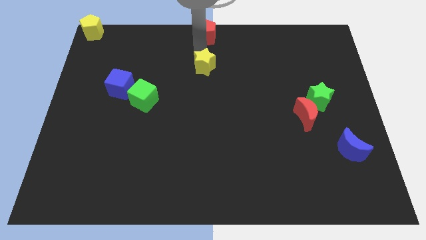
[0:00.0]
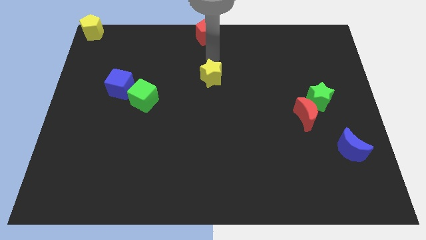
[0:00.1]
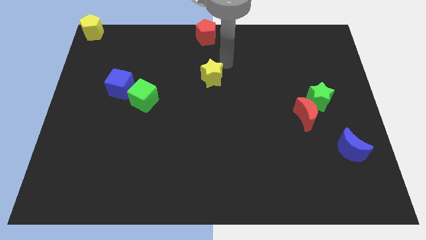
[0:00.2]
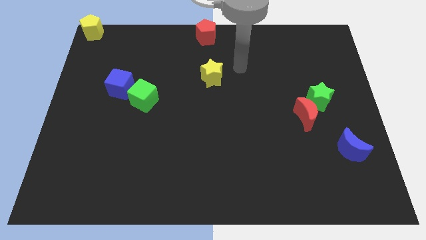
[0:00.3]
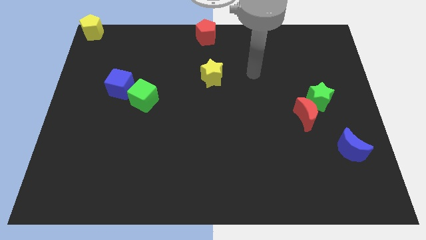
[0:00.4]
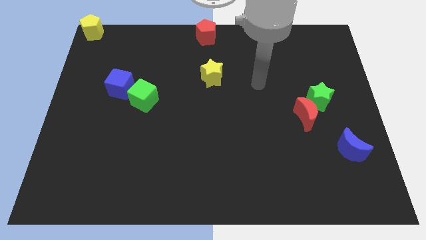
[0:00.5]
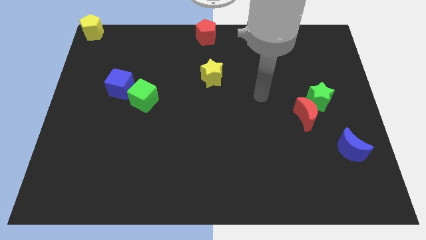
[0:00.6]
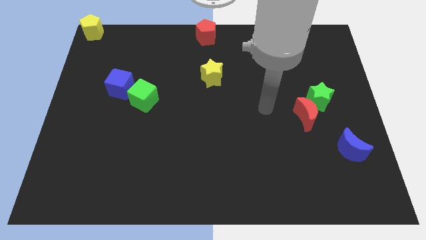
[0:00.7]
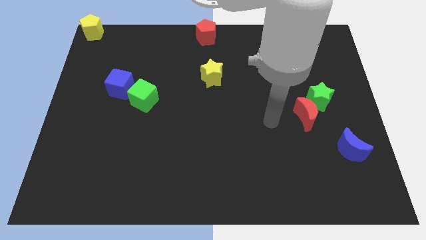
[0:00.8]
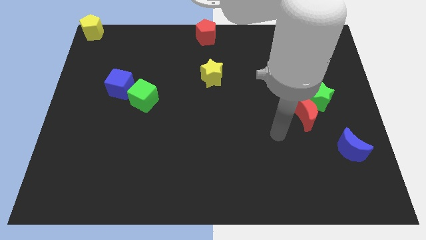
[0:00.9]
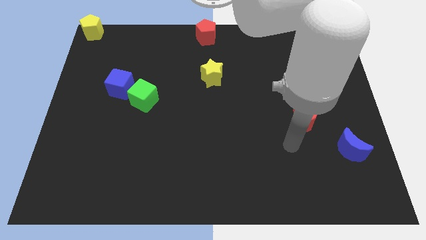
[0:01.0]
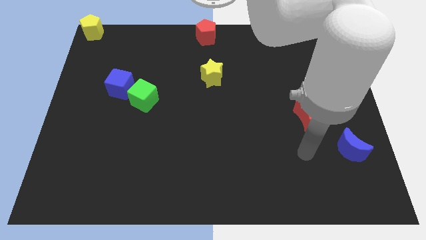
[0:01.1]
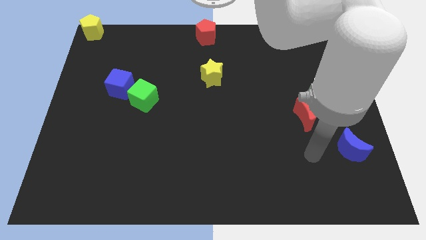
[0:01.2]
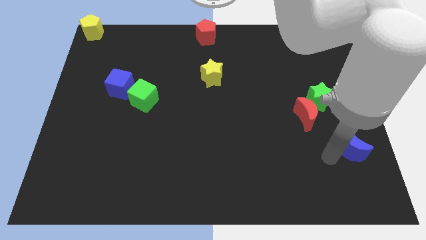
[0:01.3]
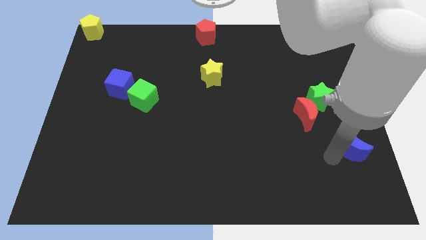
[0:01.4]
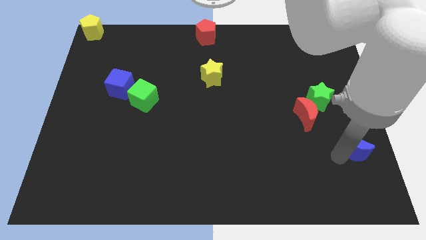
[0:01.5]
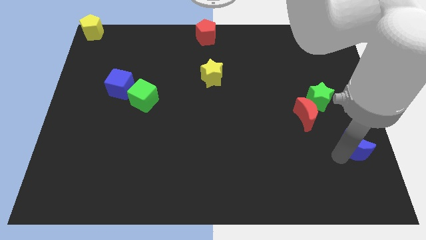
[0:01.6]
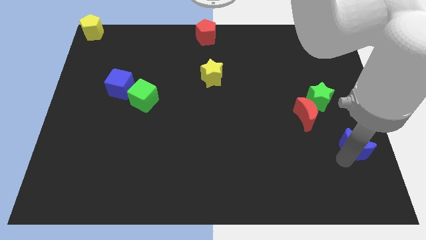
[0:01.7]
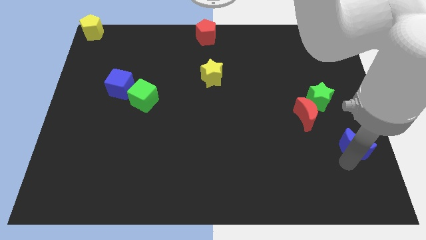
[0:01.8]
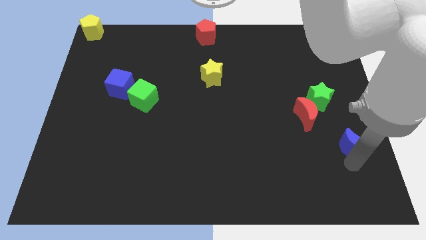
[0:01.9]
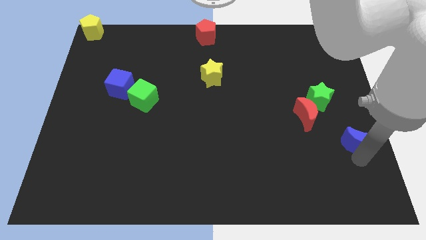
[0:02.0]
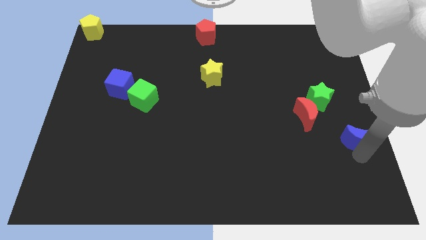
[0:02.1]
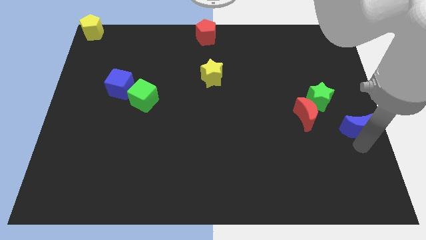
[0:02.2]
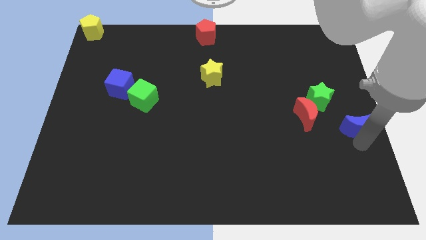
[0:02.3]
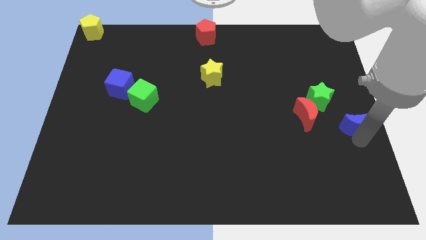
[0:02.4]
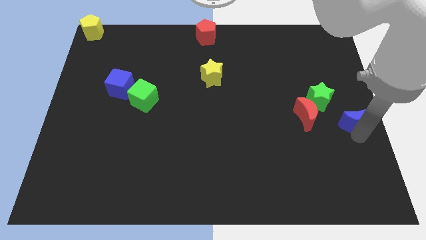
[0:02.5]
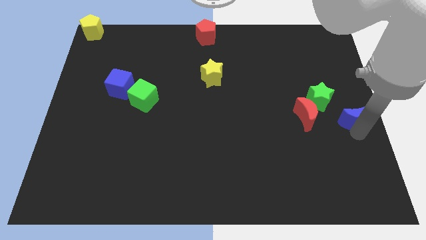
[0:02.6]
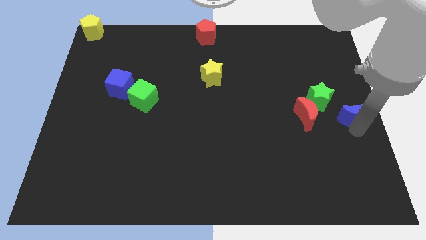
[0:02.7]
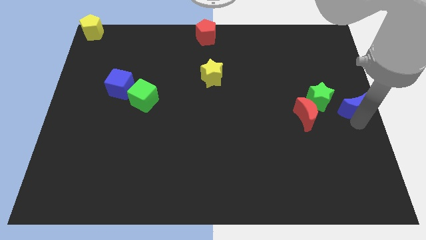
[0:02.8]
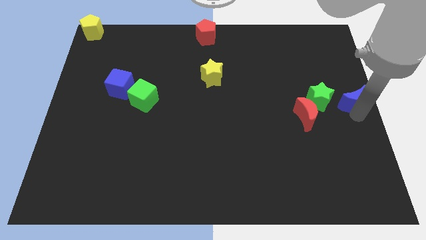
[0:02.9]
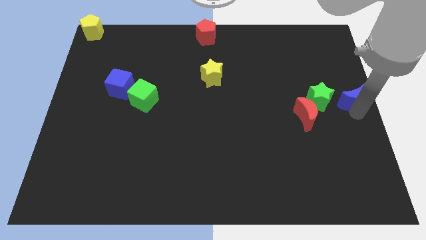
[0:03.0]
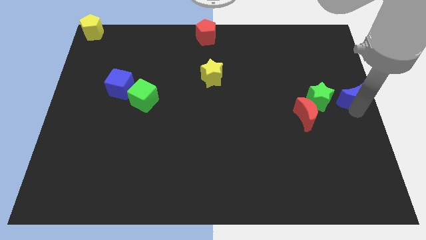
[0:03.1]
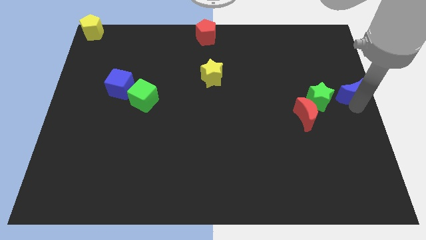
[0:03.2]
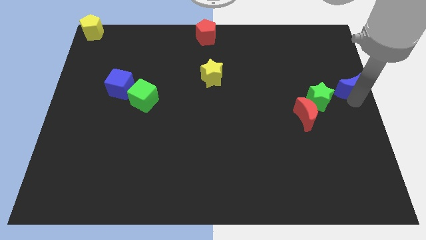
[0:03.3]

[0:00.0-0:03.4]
move blue moon to the right of green star

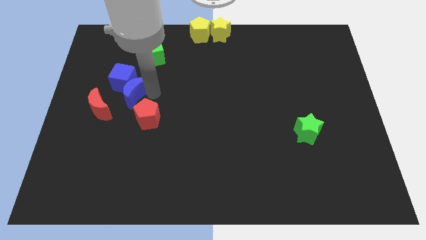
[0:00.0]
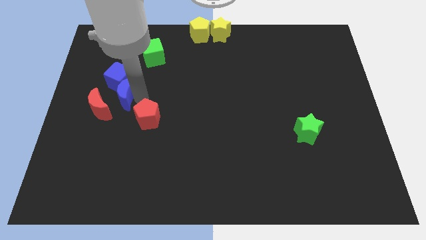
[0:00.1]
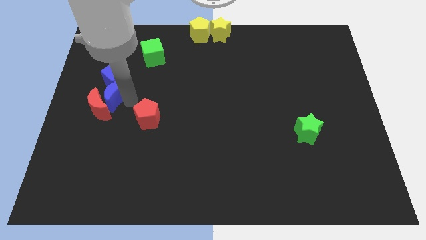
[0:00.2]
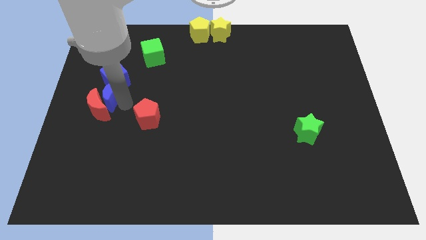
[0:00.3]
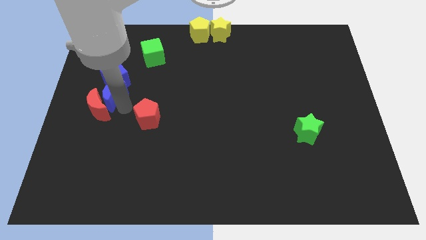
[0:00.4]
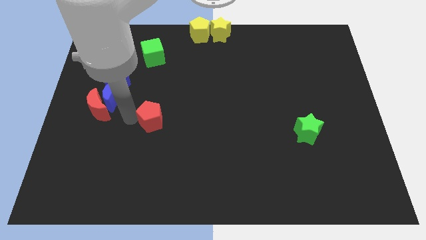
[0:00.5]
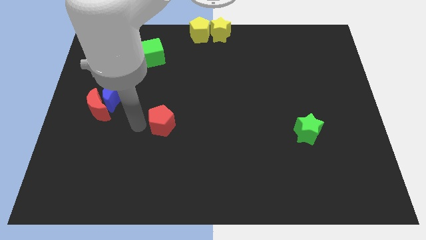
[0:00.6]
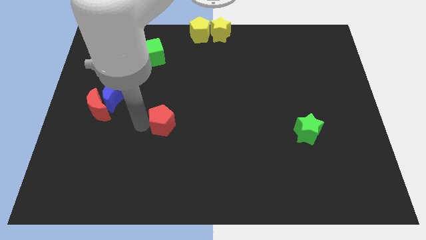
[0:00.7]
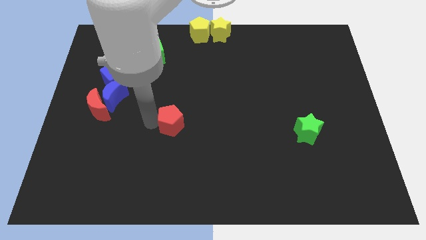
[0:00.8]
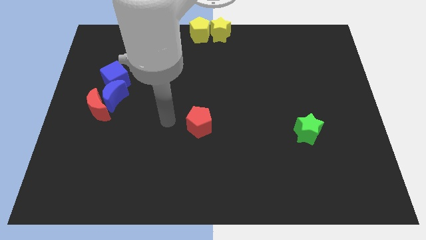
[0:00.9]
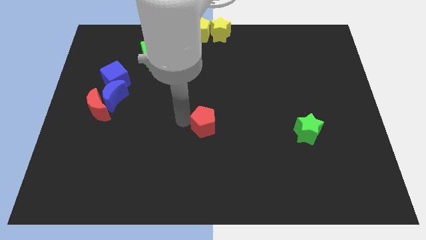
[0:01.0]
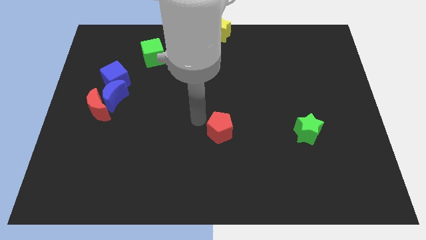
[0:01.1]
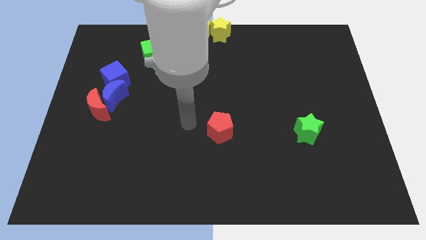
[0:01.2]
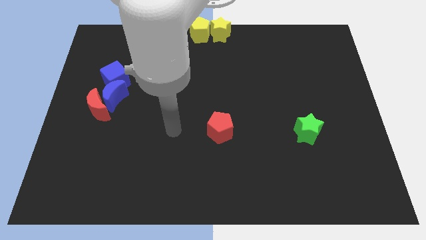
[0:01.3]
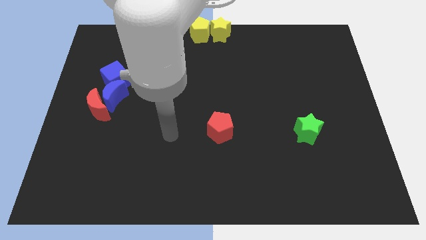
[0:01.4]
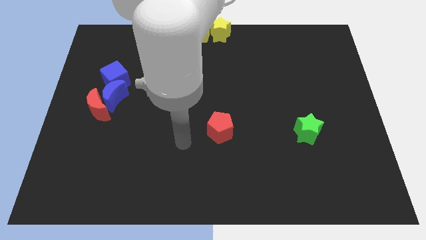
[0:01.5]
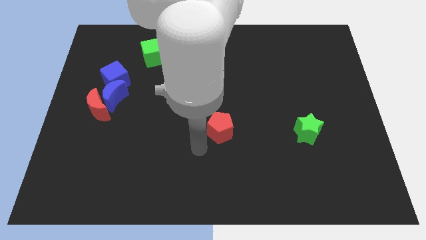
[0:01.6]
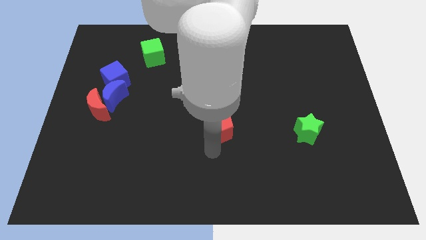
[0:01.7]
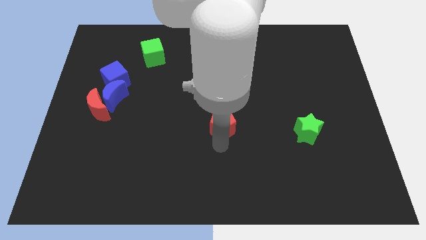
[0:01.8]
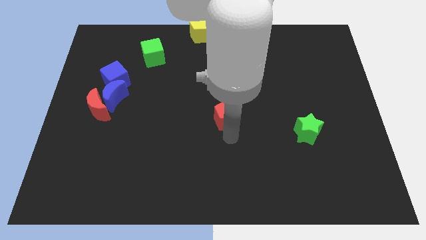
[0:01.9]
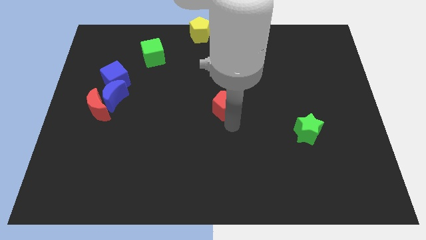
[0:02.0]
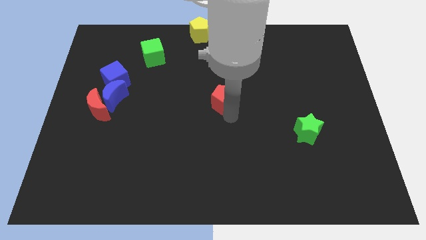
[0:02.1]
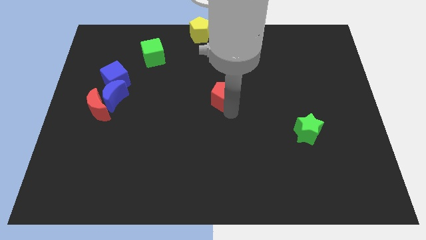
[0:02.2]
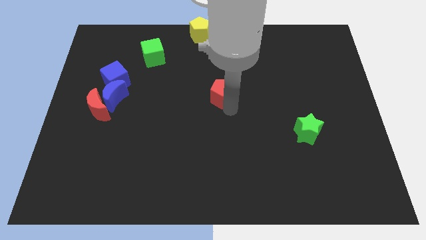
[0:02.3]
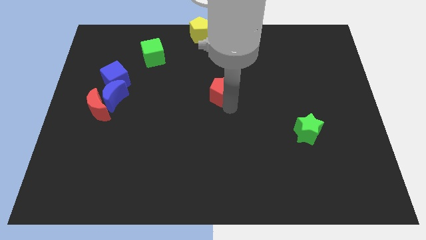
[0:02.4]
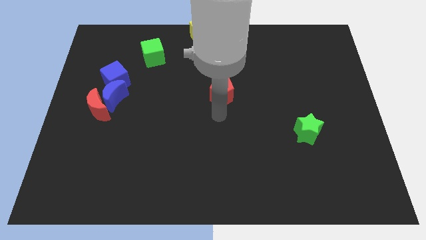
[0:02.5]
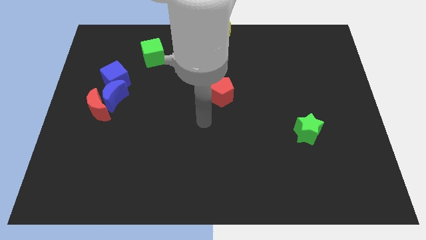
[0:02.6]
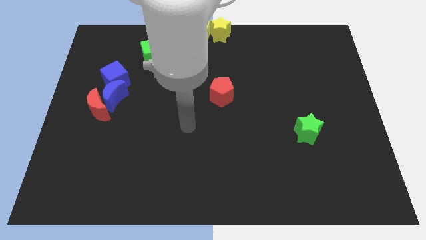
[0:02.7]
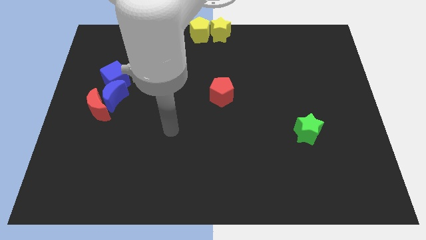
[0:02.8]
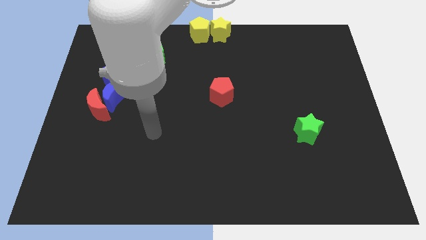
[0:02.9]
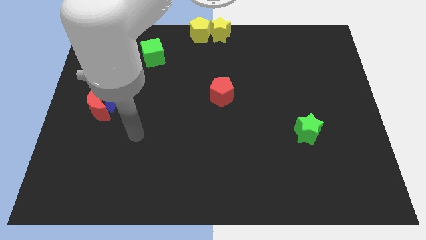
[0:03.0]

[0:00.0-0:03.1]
separate red pentagon from blue moon

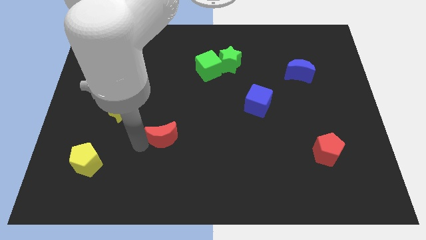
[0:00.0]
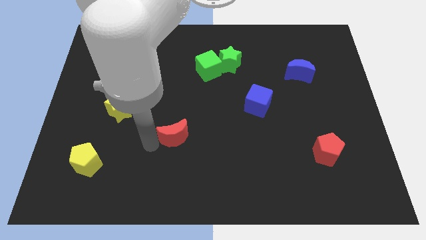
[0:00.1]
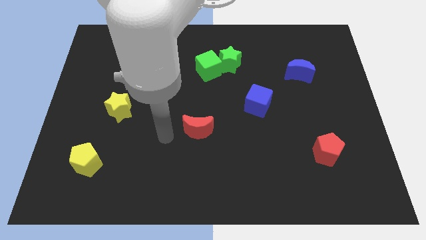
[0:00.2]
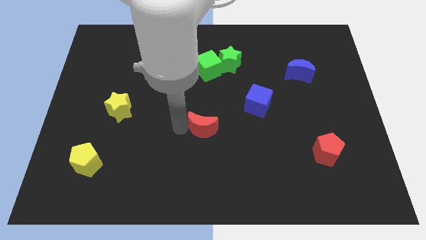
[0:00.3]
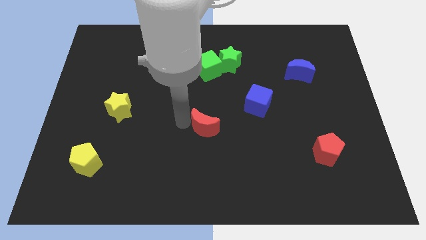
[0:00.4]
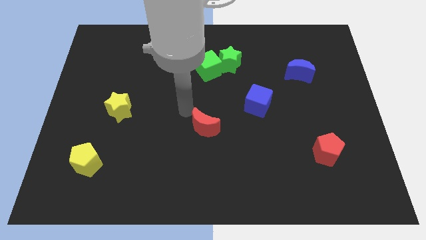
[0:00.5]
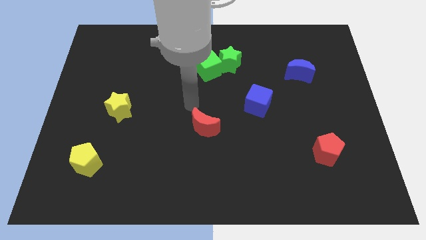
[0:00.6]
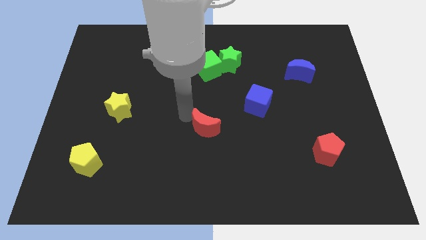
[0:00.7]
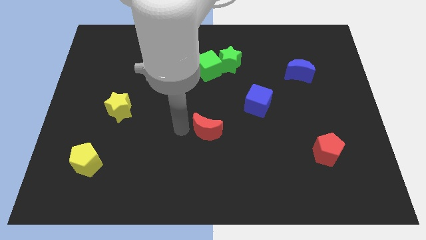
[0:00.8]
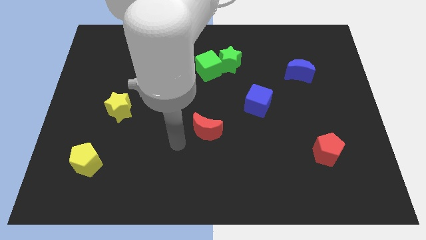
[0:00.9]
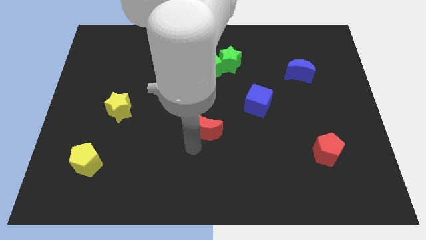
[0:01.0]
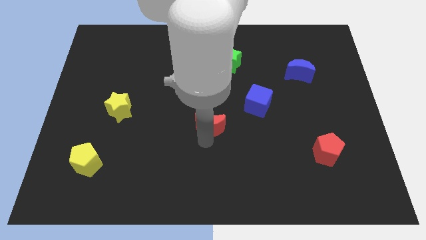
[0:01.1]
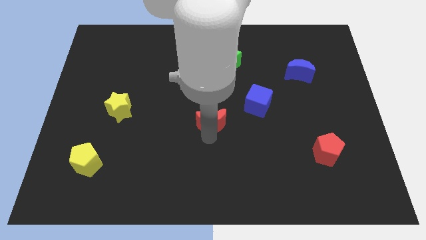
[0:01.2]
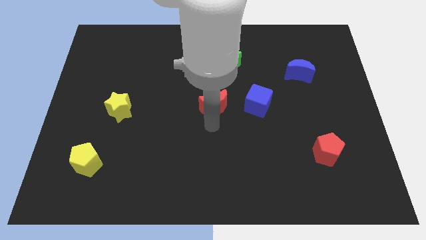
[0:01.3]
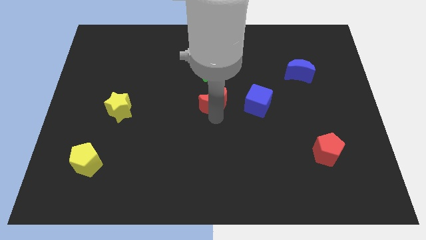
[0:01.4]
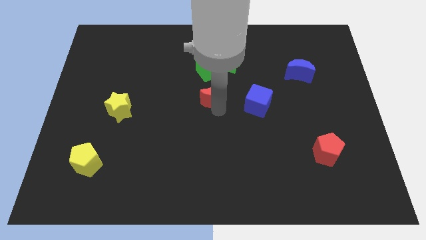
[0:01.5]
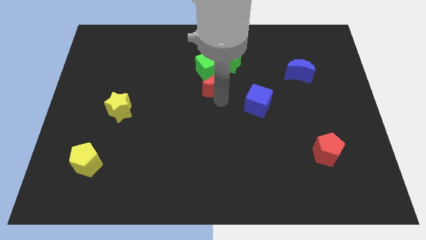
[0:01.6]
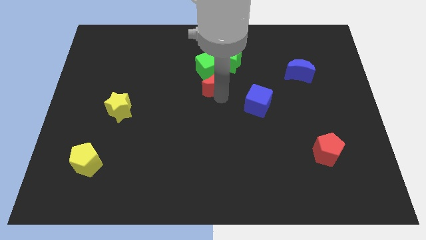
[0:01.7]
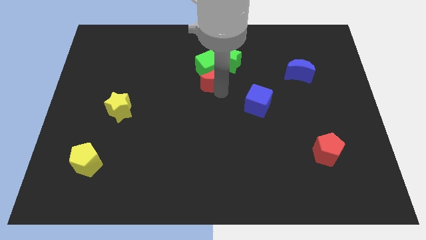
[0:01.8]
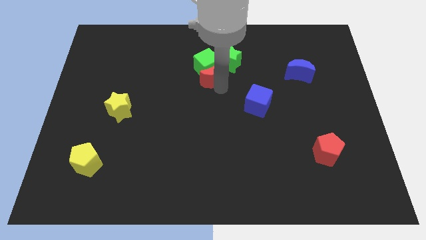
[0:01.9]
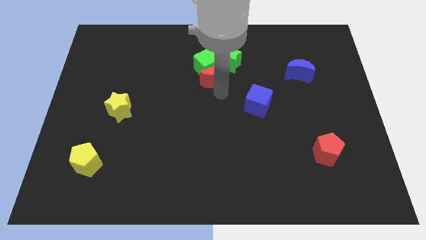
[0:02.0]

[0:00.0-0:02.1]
move the red moon close to the green cube

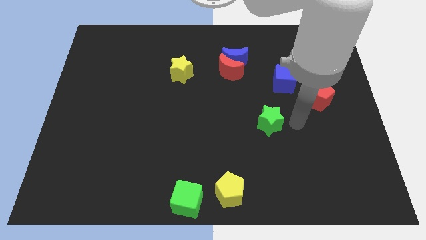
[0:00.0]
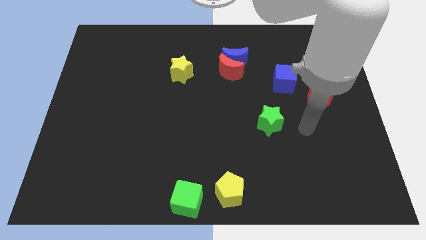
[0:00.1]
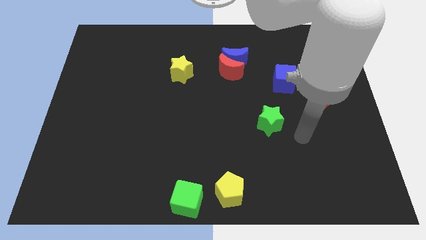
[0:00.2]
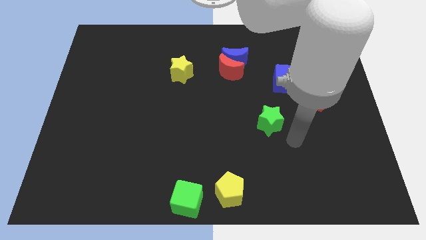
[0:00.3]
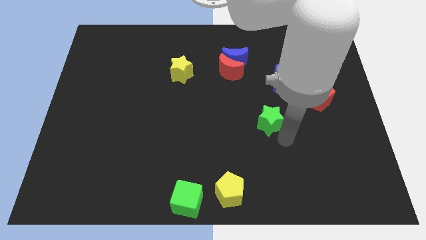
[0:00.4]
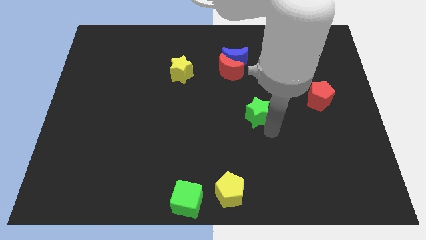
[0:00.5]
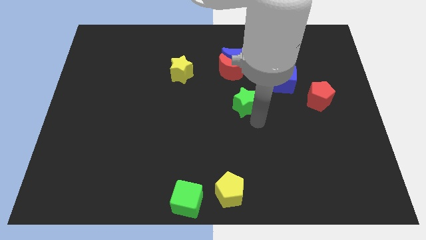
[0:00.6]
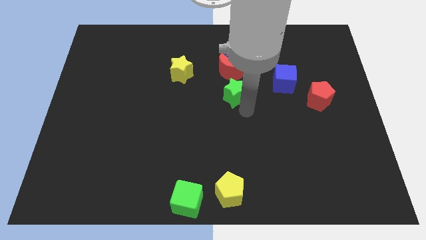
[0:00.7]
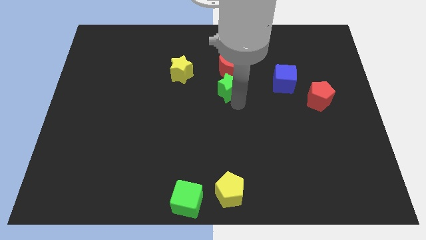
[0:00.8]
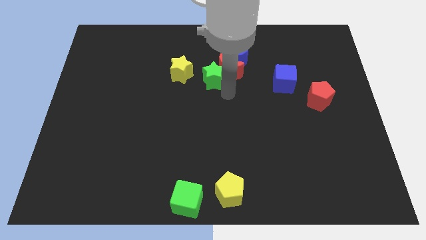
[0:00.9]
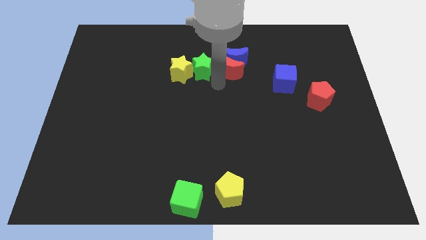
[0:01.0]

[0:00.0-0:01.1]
move the green star to the left of the red crescent
